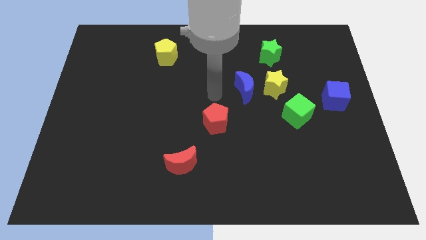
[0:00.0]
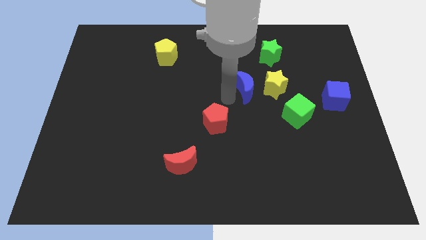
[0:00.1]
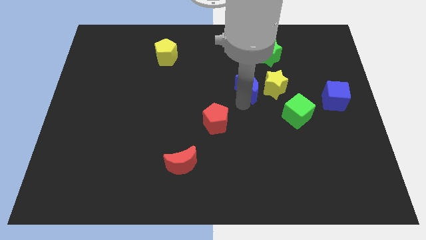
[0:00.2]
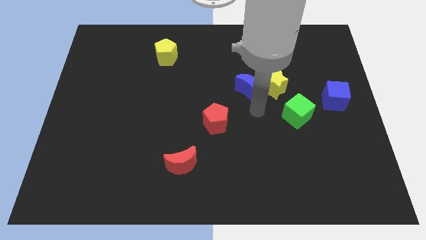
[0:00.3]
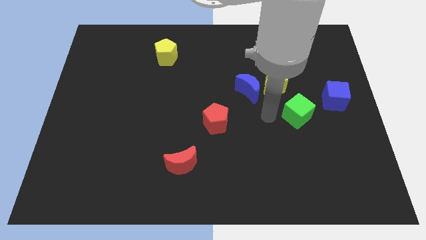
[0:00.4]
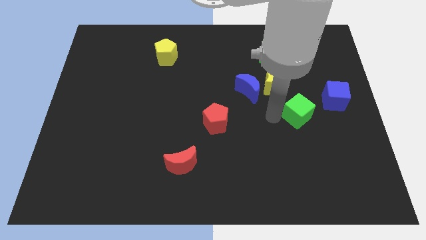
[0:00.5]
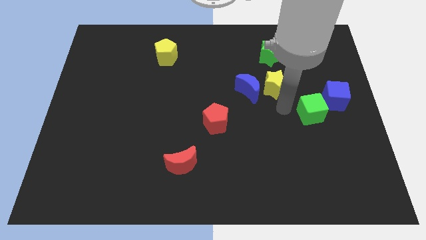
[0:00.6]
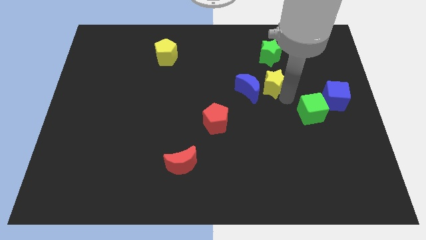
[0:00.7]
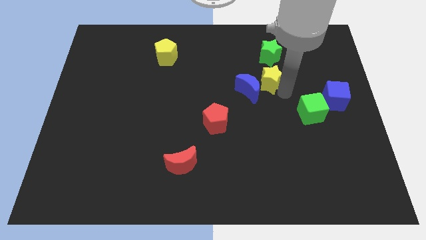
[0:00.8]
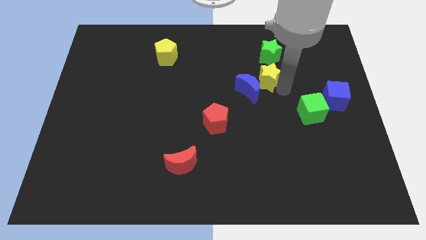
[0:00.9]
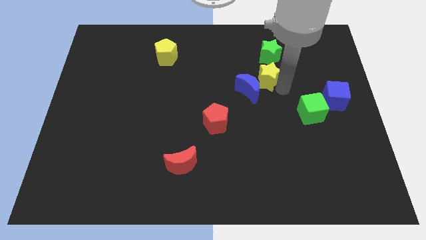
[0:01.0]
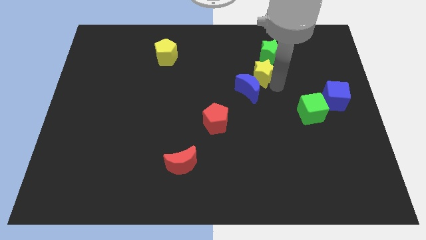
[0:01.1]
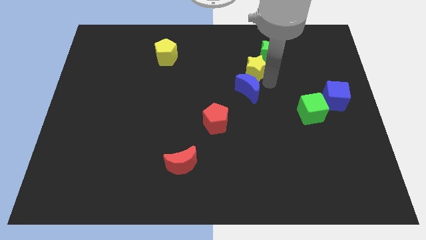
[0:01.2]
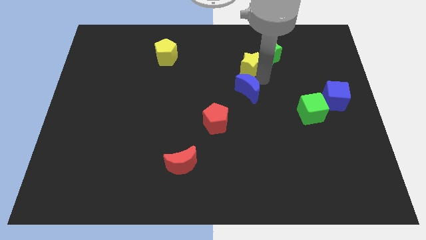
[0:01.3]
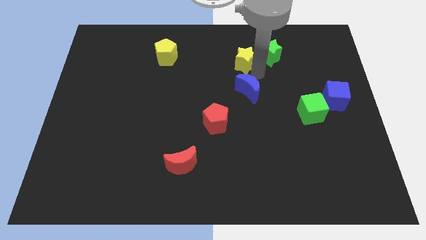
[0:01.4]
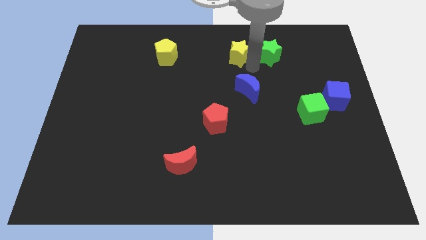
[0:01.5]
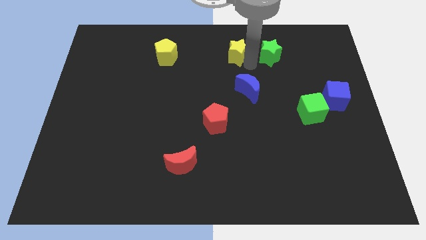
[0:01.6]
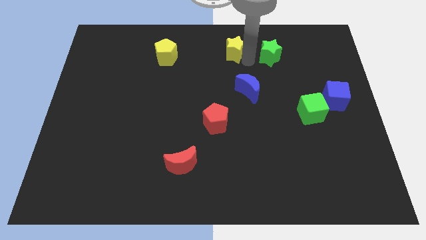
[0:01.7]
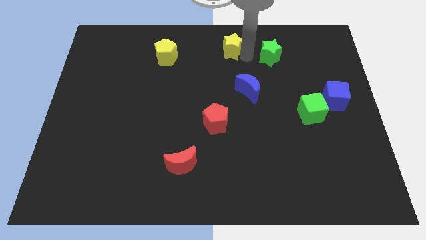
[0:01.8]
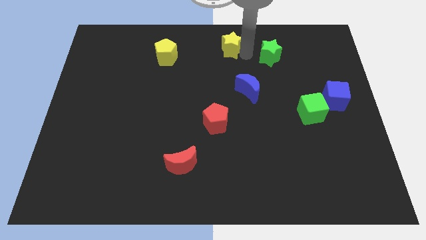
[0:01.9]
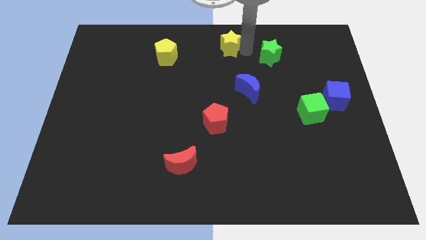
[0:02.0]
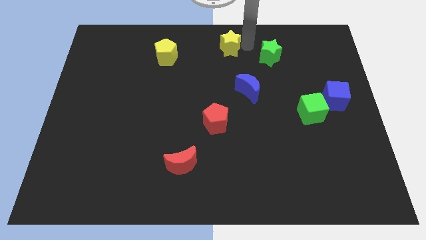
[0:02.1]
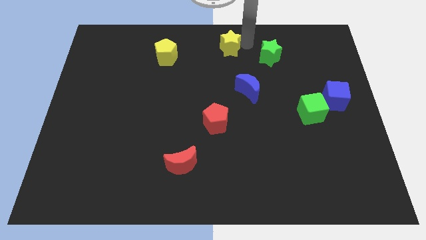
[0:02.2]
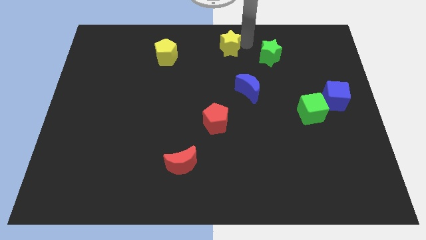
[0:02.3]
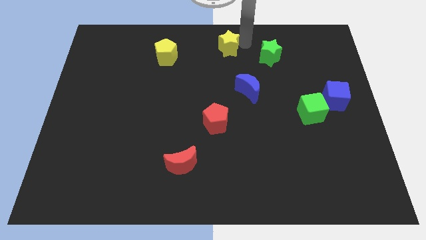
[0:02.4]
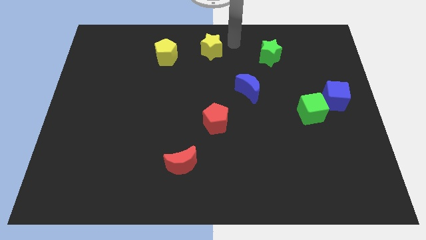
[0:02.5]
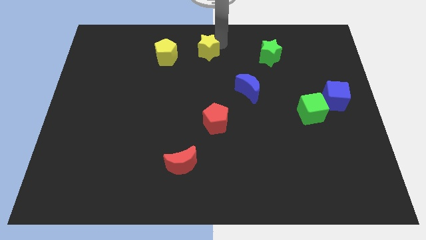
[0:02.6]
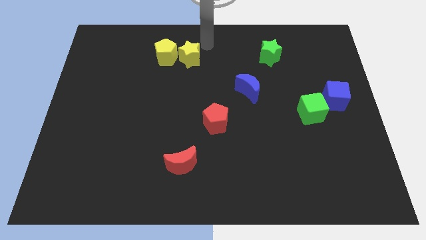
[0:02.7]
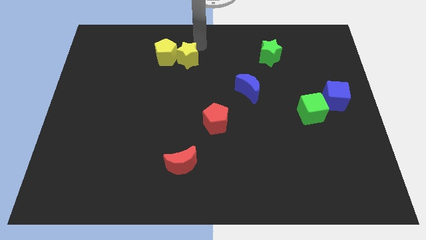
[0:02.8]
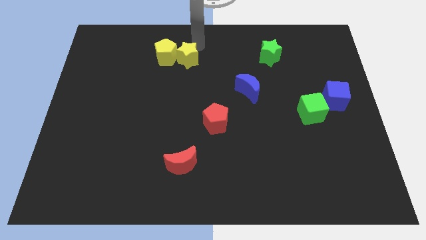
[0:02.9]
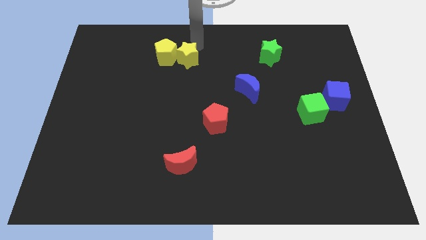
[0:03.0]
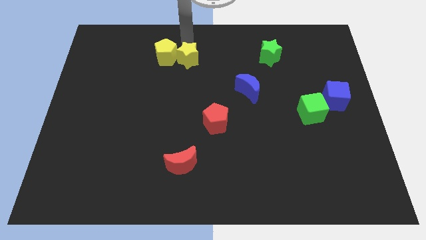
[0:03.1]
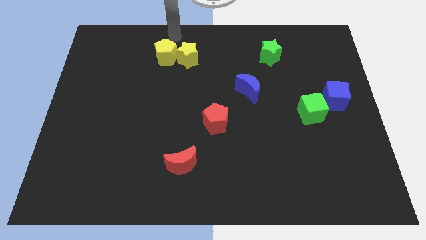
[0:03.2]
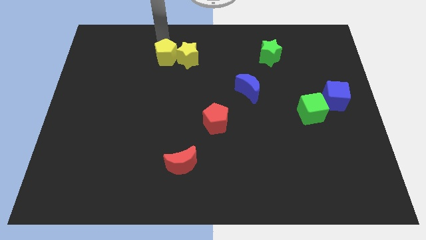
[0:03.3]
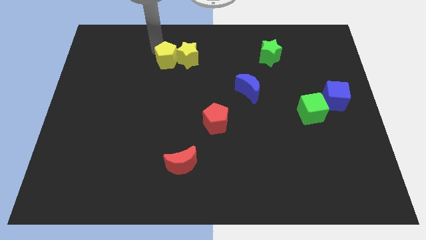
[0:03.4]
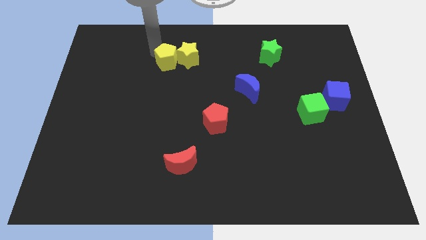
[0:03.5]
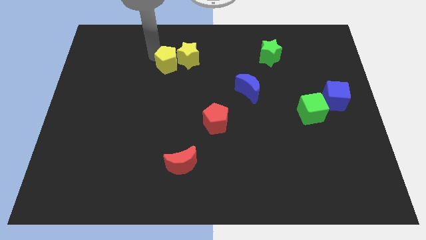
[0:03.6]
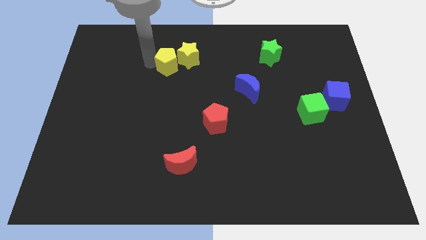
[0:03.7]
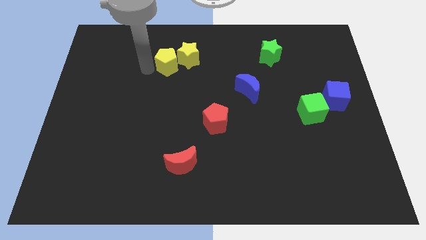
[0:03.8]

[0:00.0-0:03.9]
place the yellow star at the right side of the yellow pentagon

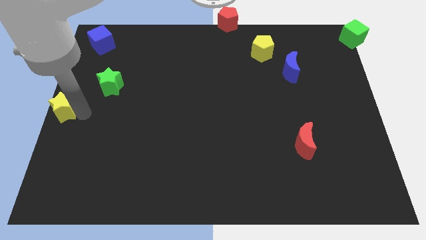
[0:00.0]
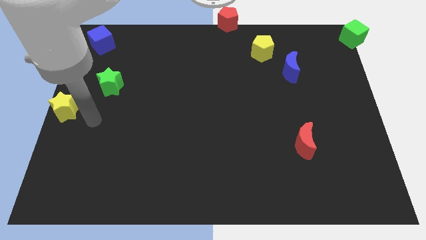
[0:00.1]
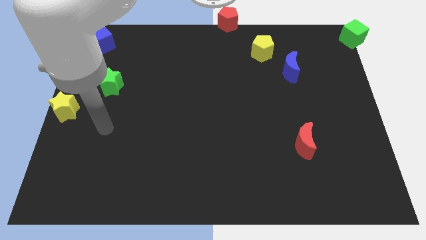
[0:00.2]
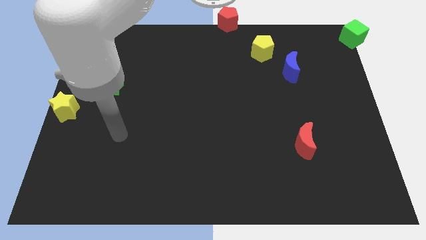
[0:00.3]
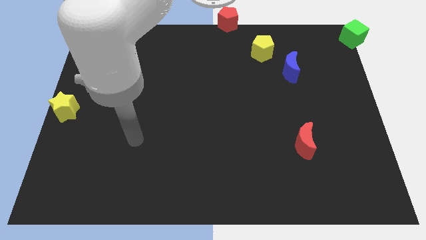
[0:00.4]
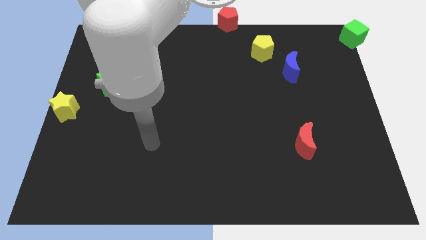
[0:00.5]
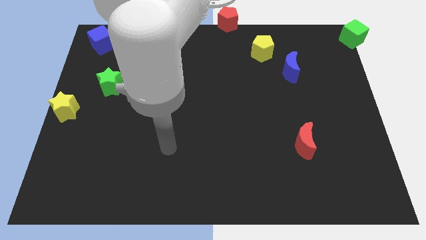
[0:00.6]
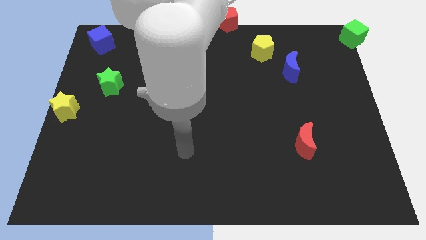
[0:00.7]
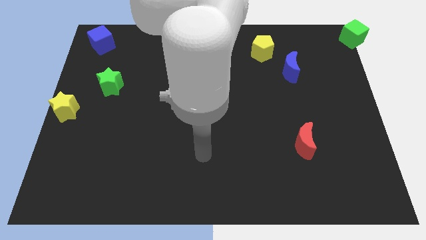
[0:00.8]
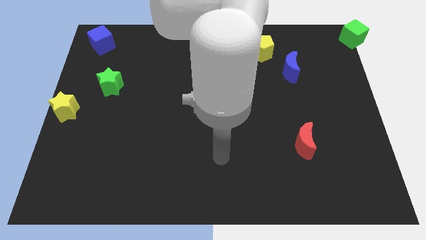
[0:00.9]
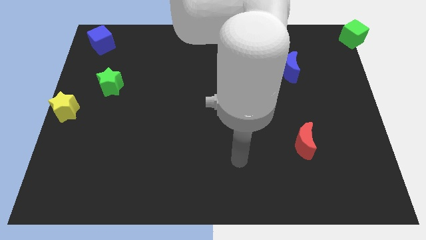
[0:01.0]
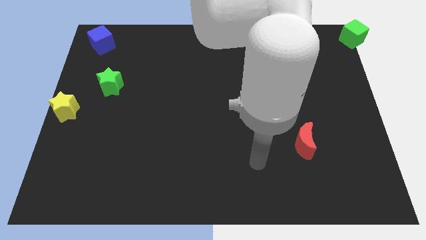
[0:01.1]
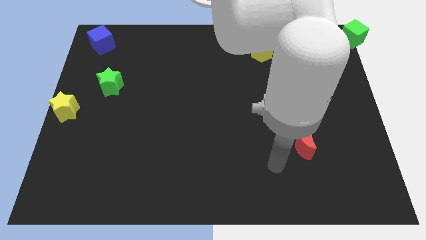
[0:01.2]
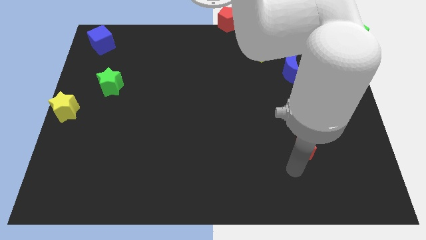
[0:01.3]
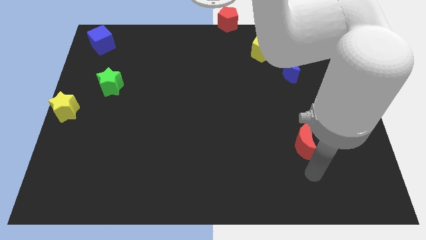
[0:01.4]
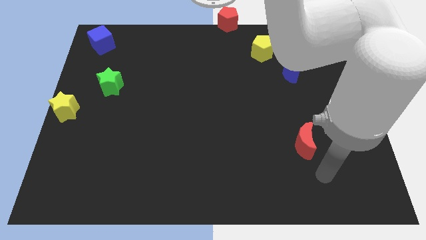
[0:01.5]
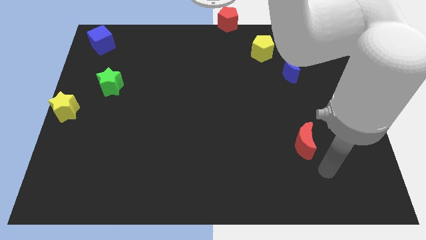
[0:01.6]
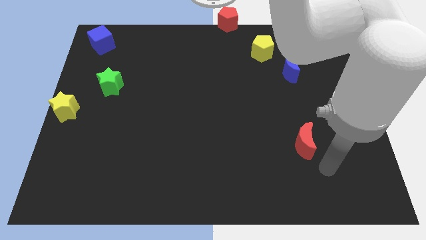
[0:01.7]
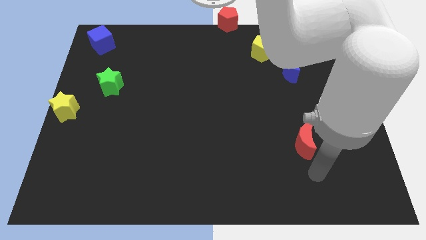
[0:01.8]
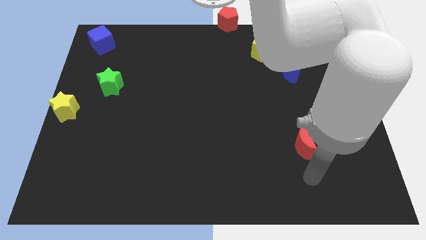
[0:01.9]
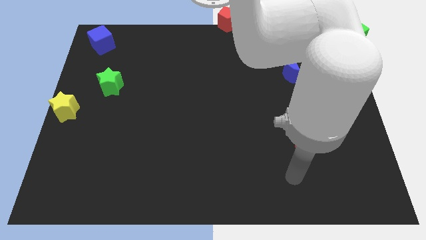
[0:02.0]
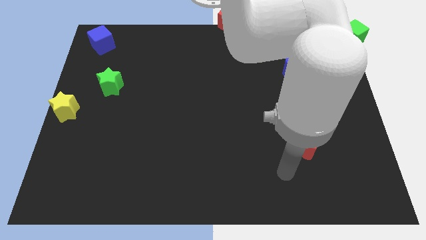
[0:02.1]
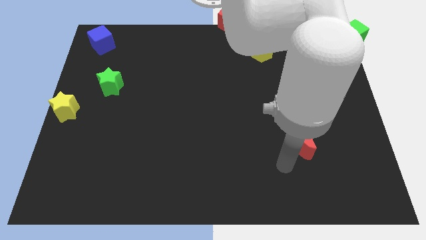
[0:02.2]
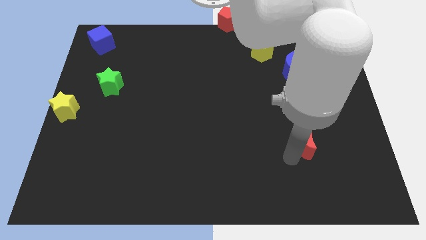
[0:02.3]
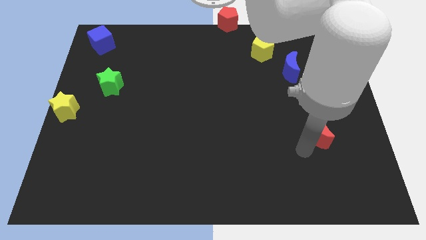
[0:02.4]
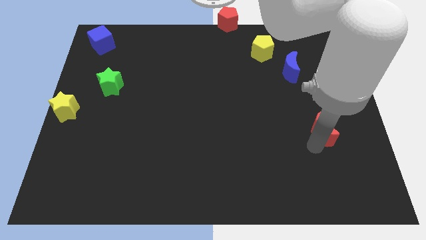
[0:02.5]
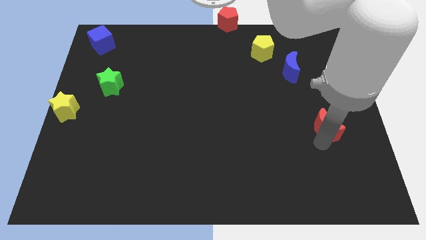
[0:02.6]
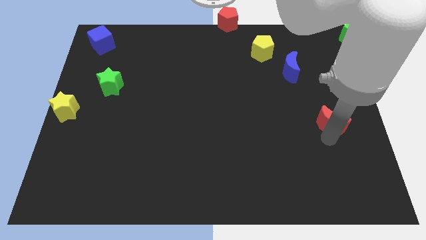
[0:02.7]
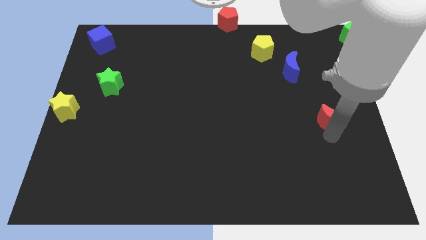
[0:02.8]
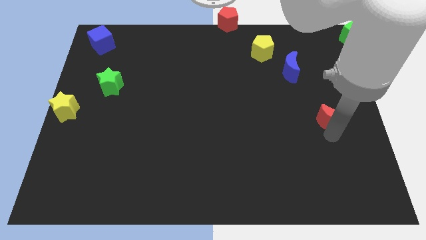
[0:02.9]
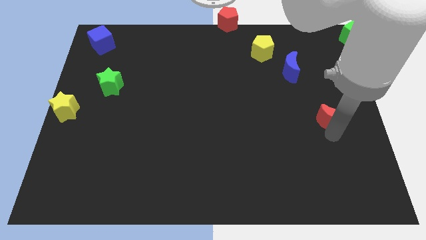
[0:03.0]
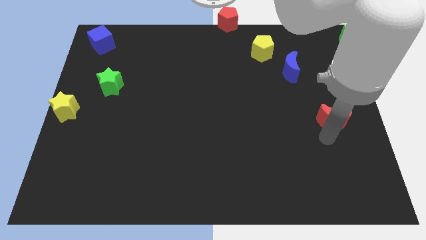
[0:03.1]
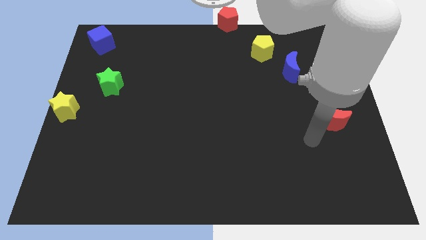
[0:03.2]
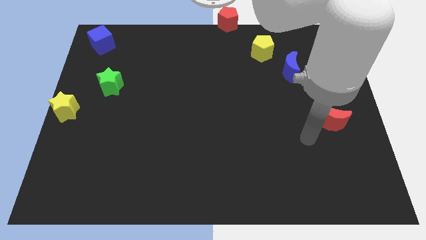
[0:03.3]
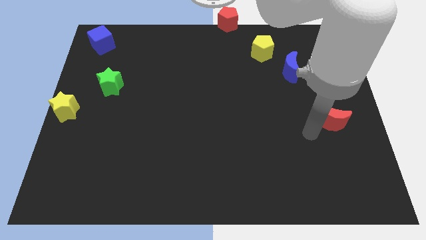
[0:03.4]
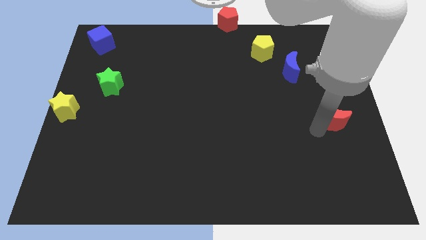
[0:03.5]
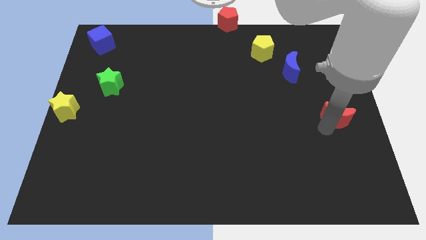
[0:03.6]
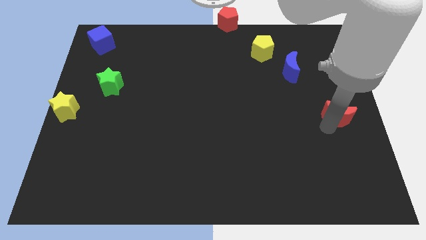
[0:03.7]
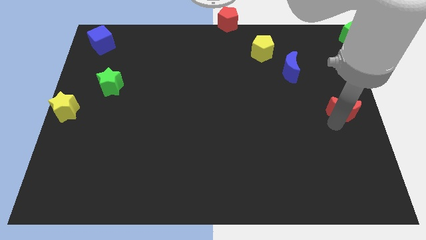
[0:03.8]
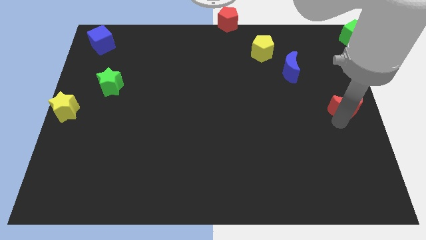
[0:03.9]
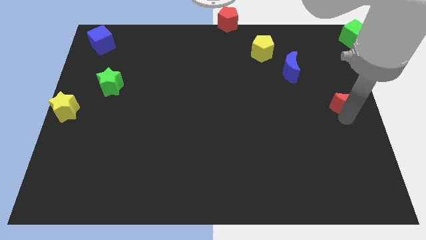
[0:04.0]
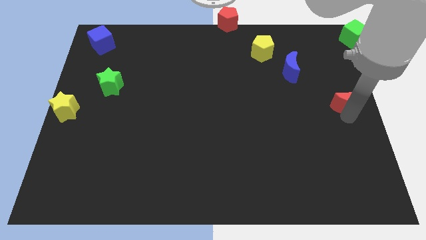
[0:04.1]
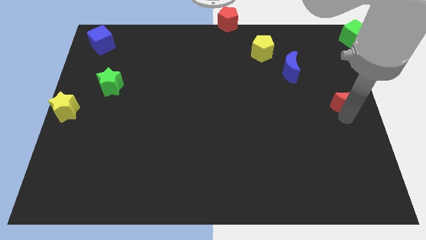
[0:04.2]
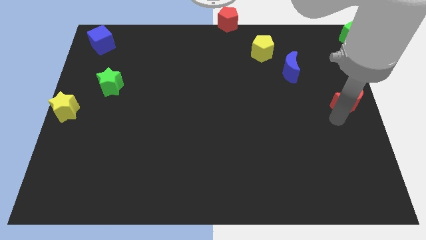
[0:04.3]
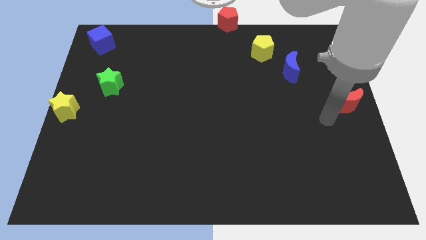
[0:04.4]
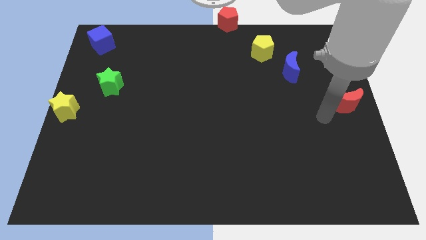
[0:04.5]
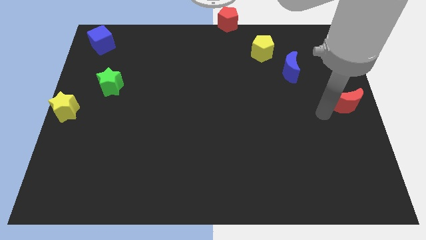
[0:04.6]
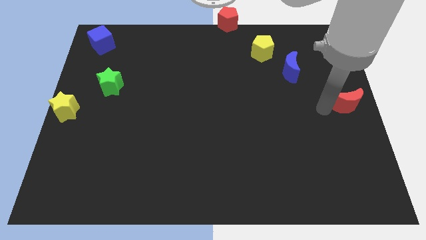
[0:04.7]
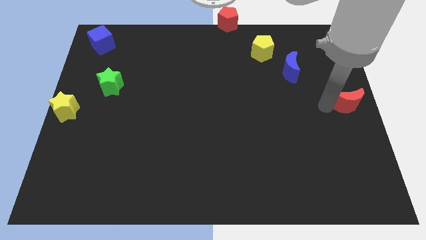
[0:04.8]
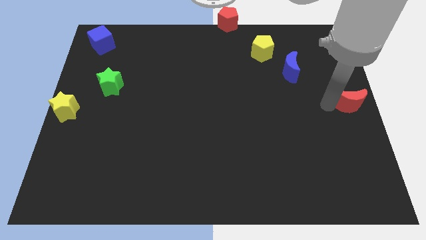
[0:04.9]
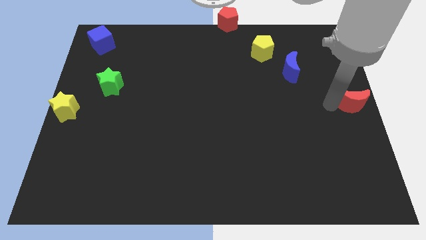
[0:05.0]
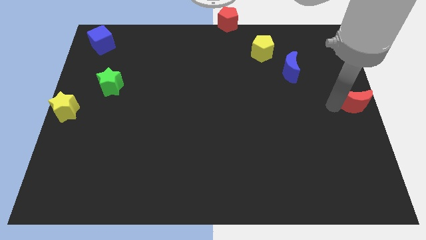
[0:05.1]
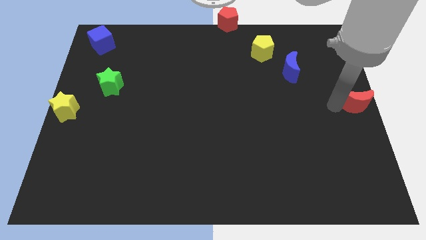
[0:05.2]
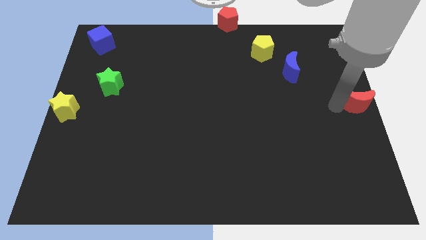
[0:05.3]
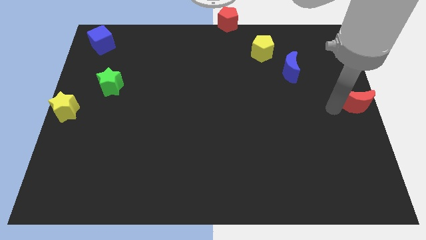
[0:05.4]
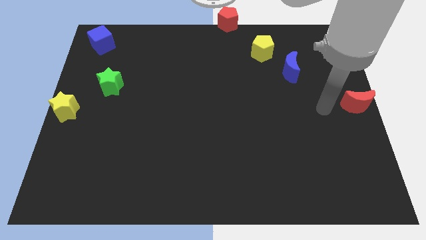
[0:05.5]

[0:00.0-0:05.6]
push the red crescent to the center right of the board
